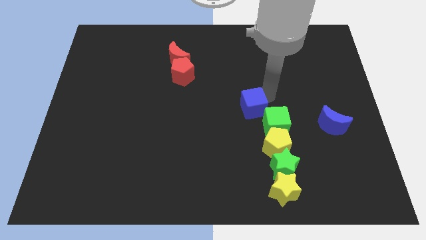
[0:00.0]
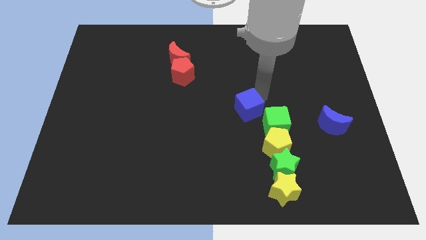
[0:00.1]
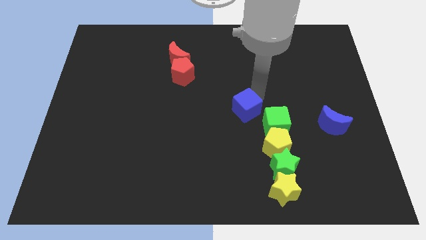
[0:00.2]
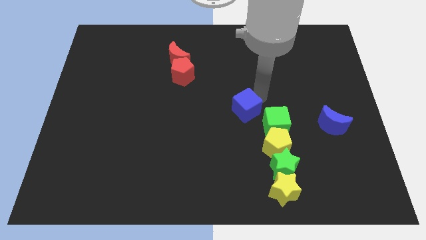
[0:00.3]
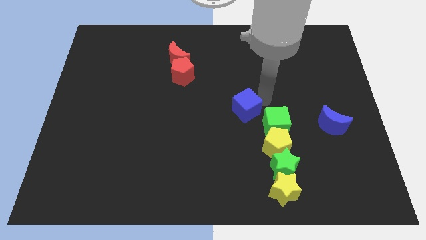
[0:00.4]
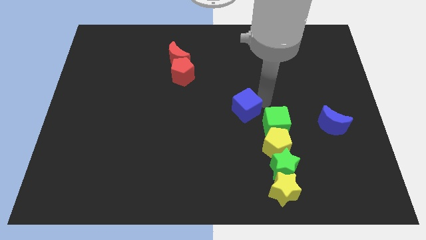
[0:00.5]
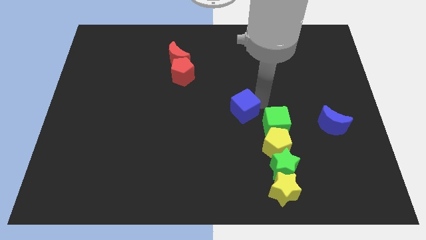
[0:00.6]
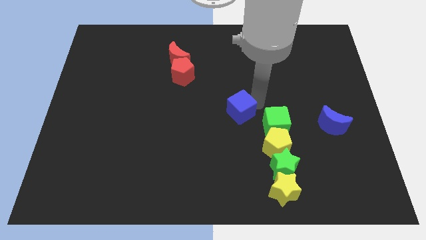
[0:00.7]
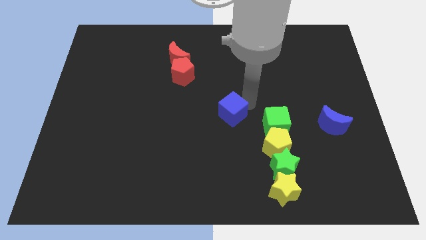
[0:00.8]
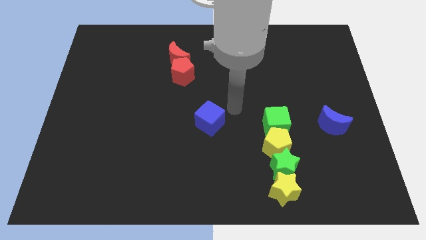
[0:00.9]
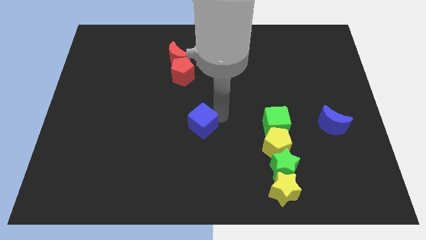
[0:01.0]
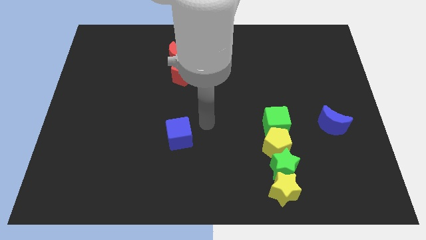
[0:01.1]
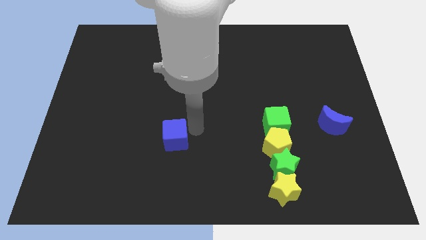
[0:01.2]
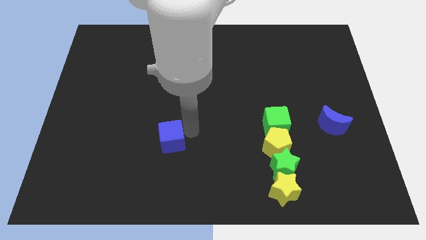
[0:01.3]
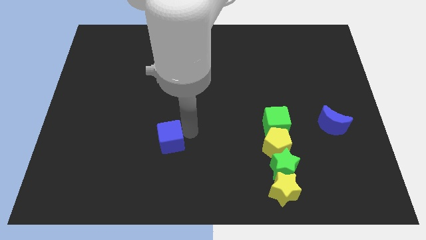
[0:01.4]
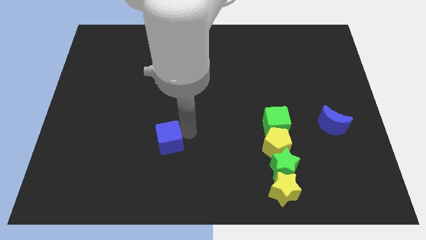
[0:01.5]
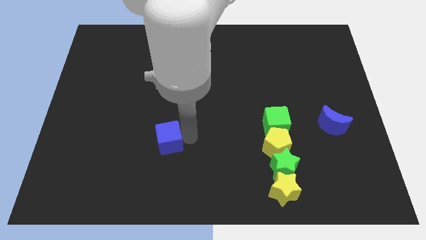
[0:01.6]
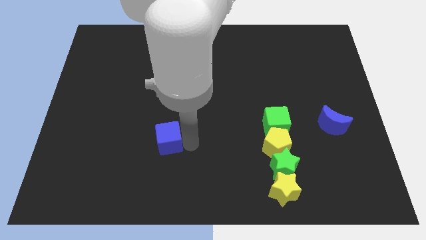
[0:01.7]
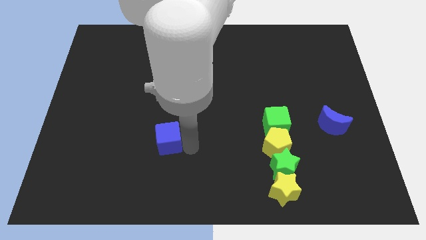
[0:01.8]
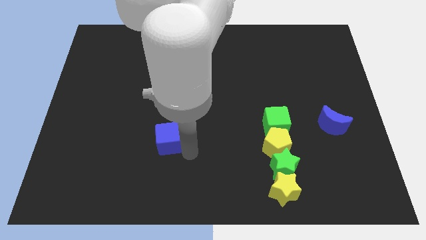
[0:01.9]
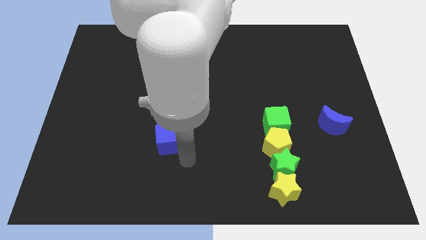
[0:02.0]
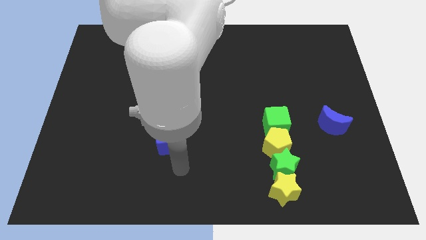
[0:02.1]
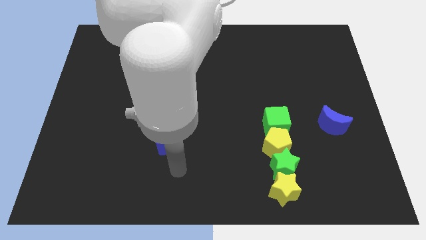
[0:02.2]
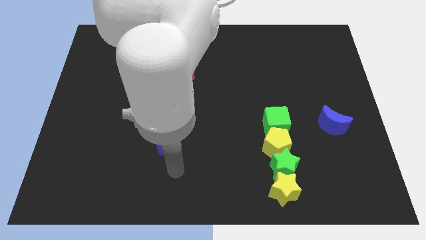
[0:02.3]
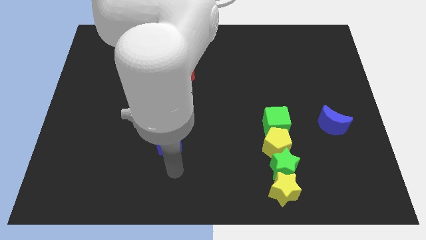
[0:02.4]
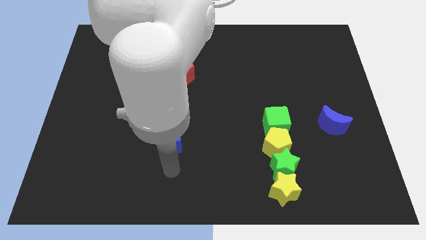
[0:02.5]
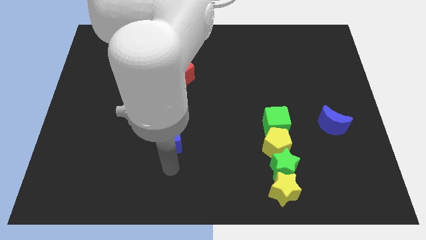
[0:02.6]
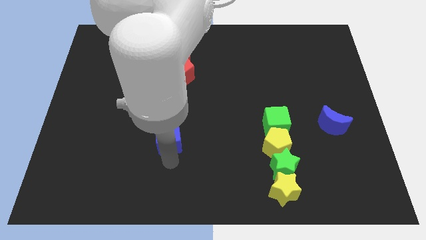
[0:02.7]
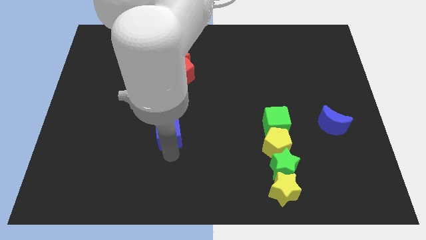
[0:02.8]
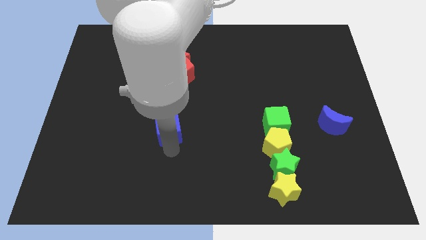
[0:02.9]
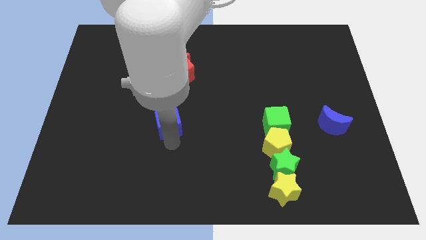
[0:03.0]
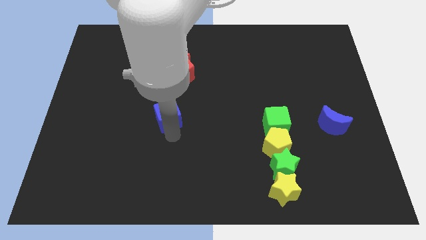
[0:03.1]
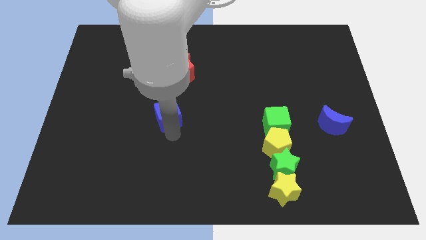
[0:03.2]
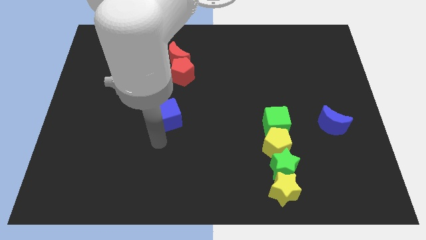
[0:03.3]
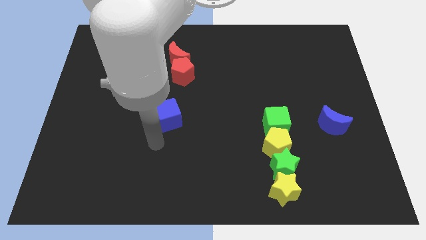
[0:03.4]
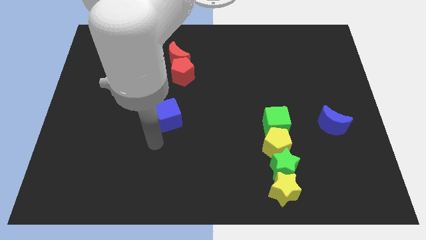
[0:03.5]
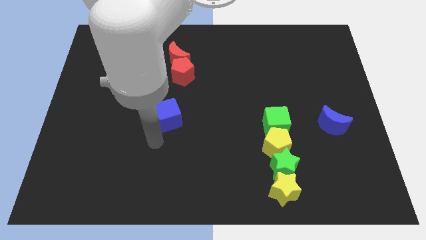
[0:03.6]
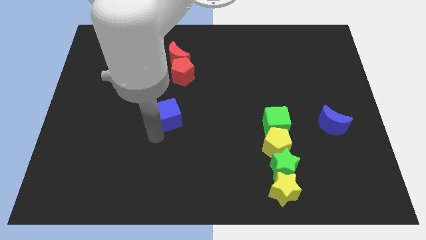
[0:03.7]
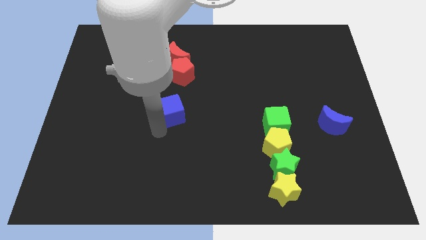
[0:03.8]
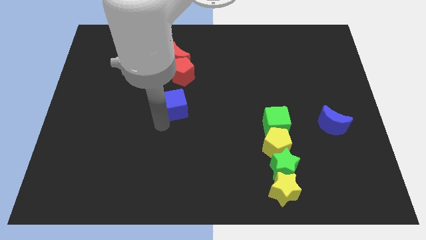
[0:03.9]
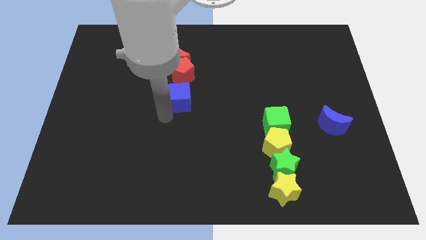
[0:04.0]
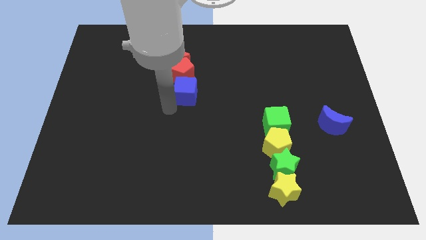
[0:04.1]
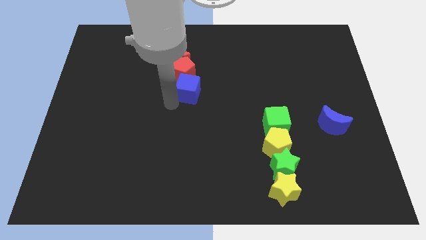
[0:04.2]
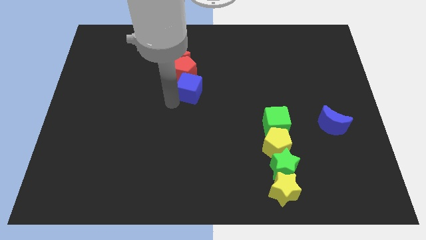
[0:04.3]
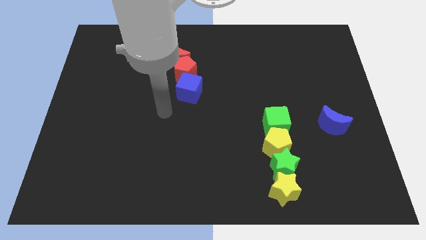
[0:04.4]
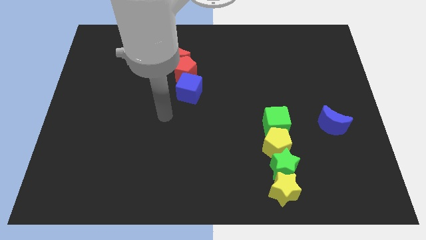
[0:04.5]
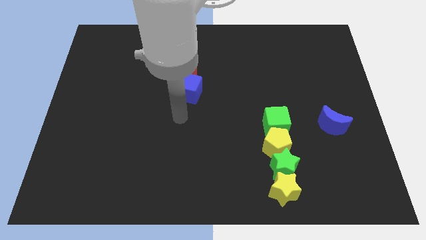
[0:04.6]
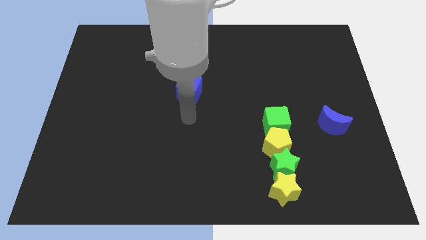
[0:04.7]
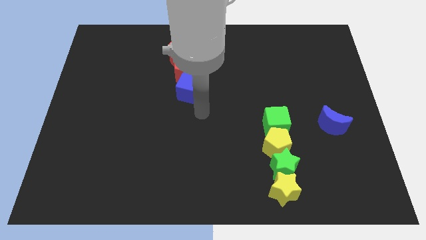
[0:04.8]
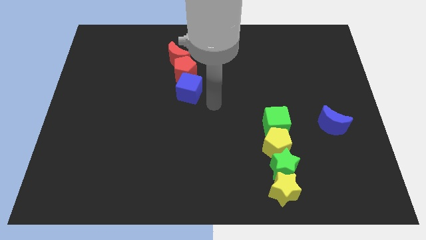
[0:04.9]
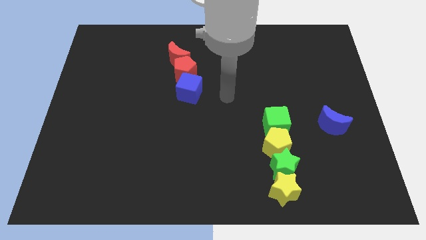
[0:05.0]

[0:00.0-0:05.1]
push blue cube into red pentagon

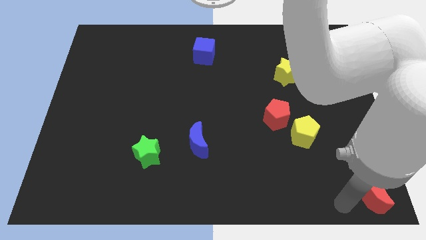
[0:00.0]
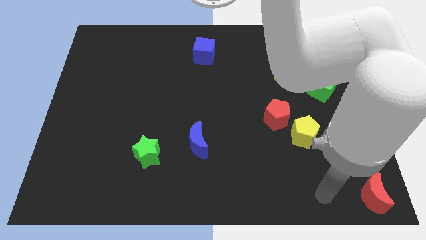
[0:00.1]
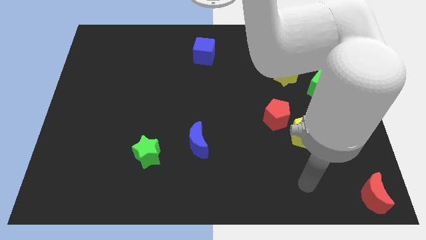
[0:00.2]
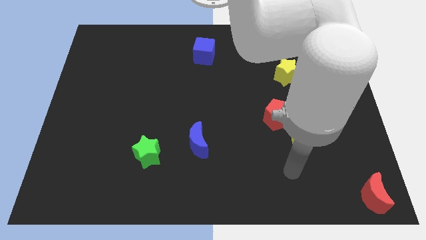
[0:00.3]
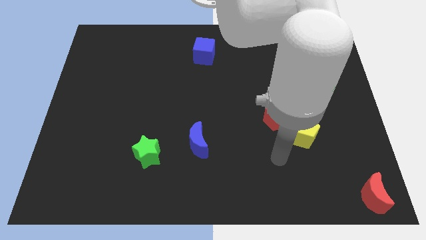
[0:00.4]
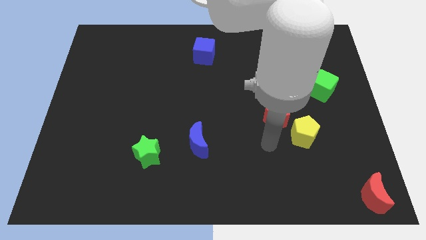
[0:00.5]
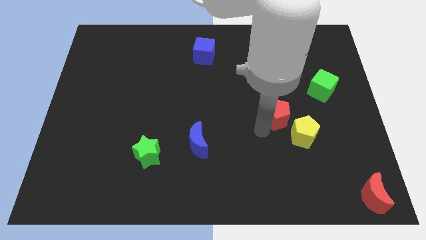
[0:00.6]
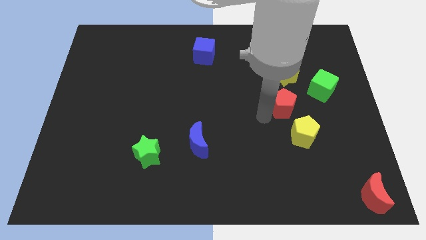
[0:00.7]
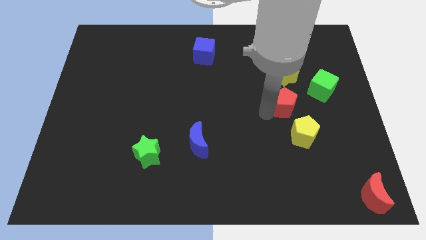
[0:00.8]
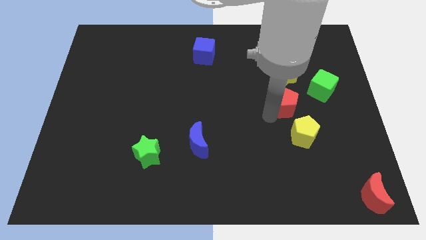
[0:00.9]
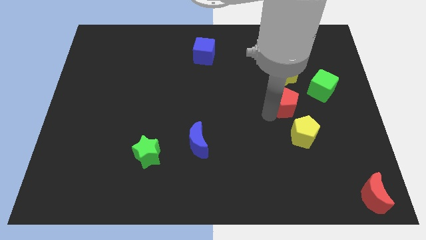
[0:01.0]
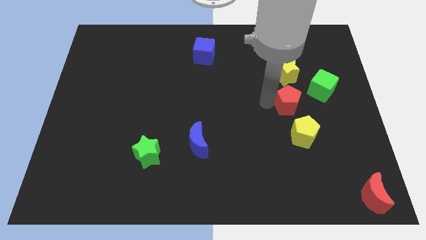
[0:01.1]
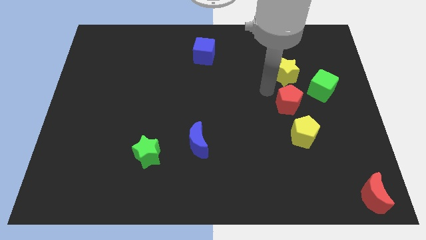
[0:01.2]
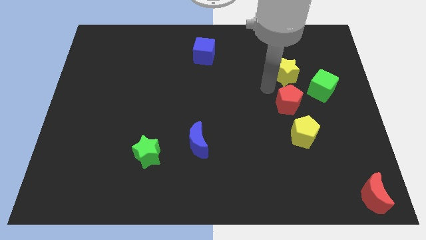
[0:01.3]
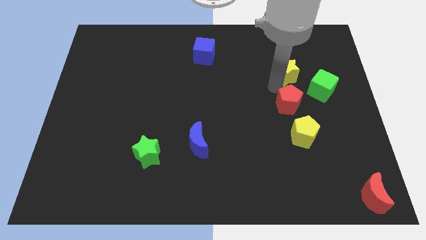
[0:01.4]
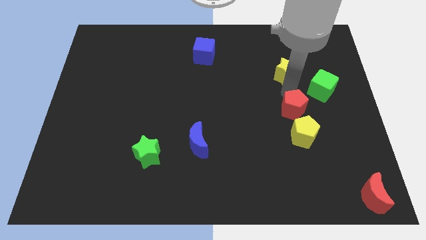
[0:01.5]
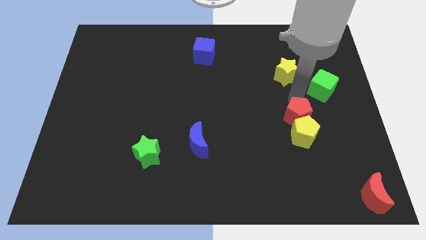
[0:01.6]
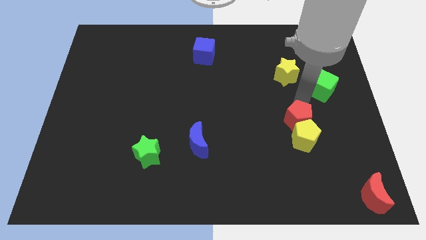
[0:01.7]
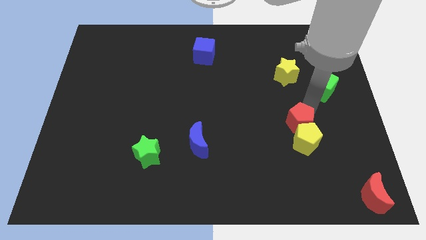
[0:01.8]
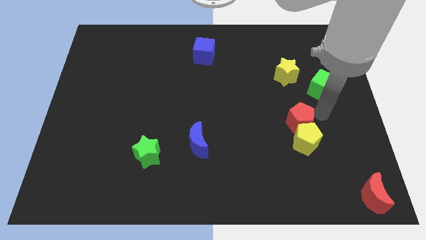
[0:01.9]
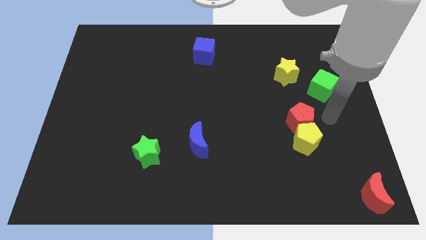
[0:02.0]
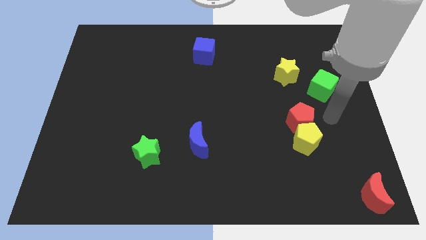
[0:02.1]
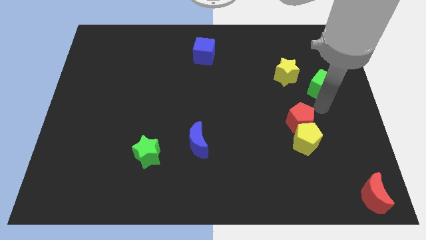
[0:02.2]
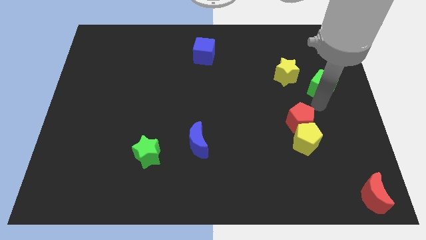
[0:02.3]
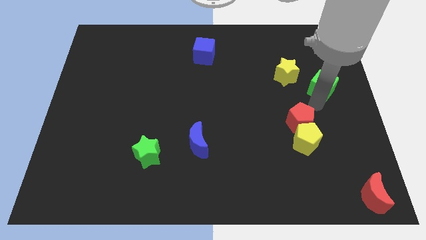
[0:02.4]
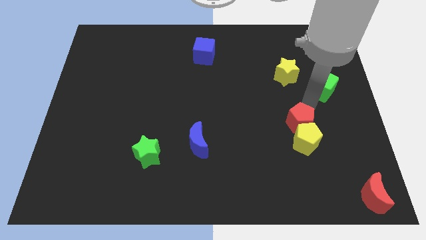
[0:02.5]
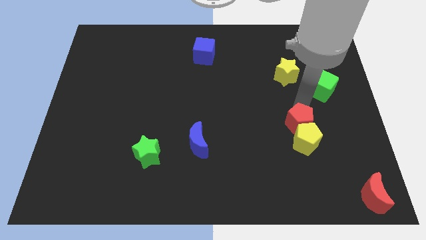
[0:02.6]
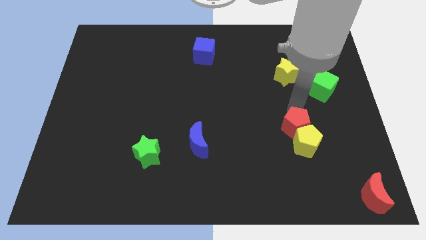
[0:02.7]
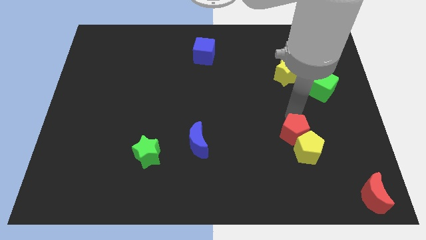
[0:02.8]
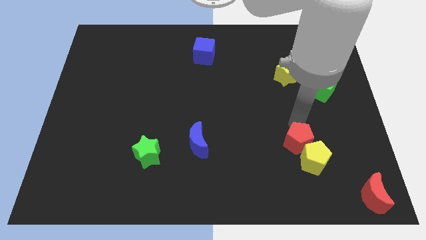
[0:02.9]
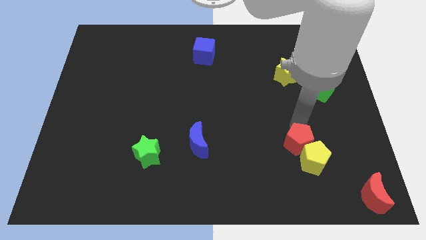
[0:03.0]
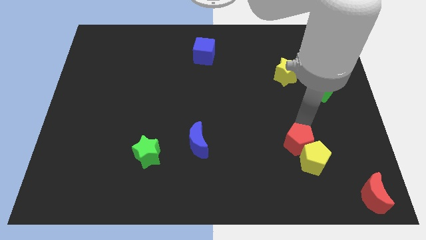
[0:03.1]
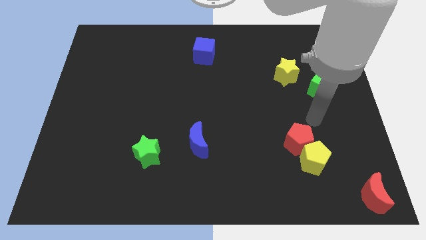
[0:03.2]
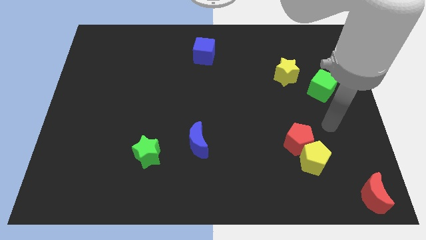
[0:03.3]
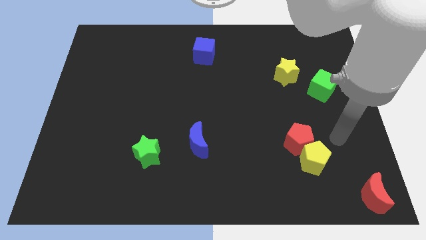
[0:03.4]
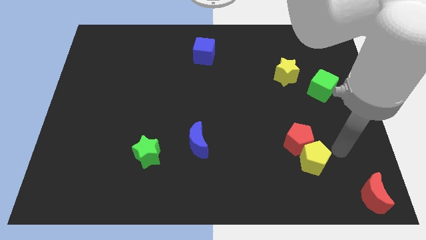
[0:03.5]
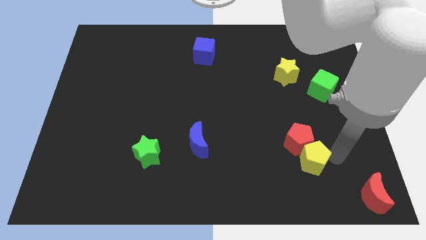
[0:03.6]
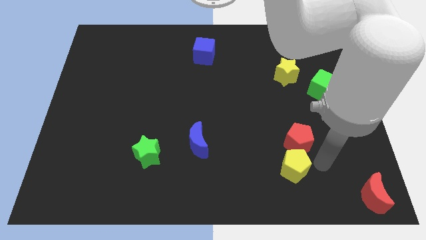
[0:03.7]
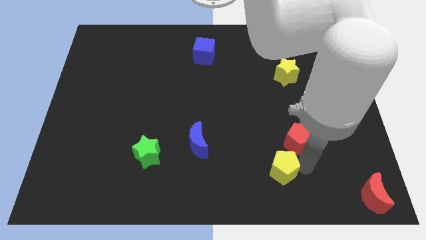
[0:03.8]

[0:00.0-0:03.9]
place the red pentagon above the yellow pentagon

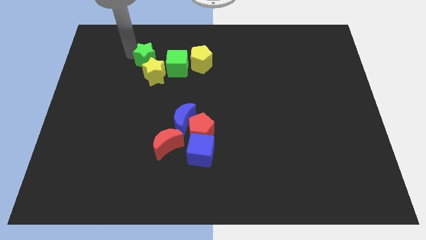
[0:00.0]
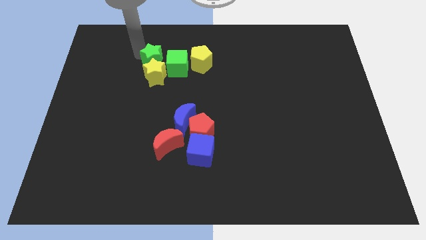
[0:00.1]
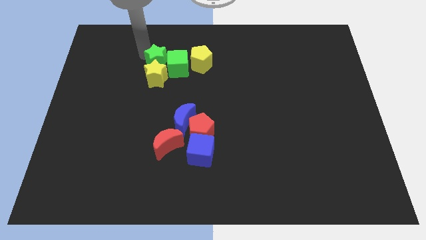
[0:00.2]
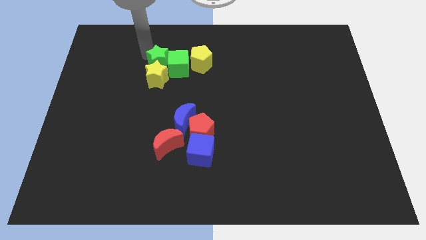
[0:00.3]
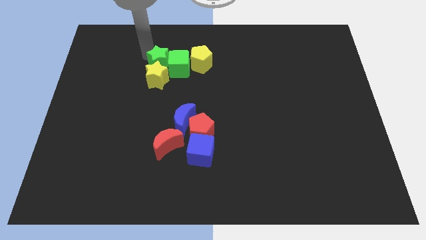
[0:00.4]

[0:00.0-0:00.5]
push the green star into the green cube
